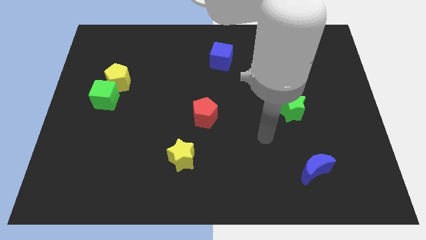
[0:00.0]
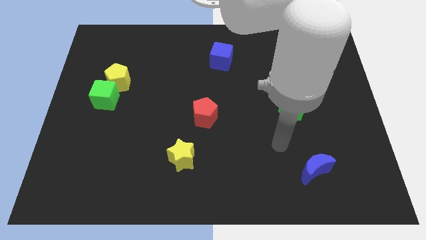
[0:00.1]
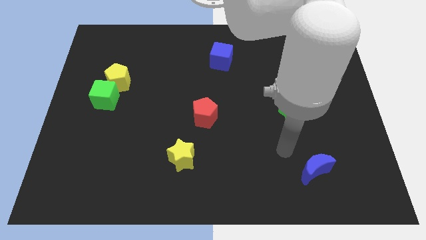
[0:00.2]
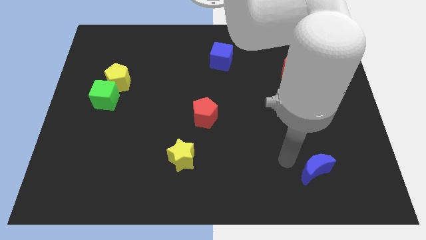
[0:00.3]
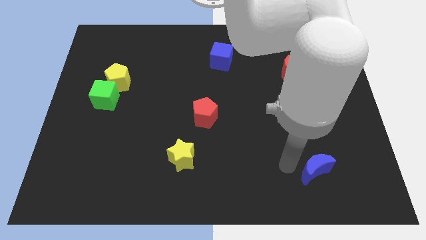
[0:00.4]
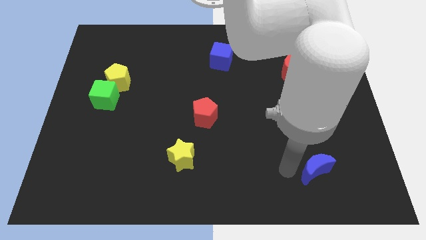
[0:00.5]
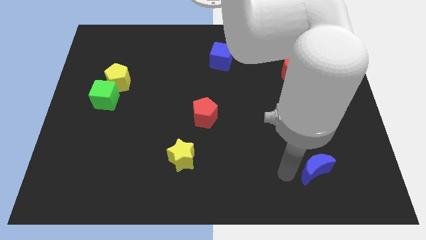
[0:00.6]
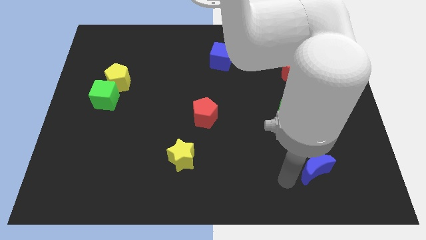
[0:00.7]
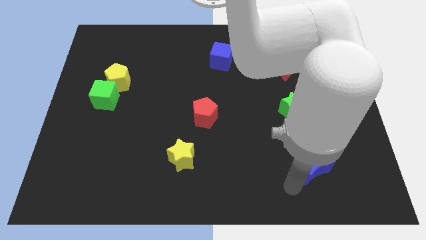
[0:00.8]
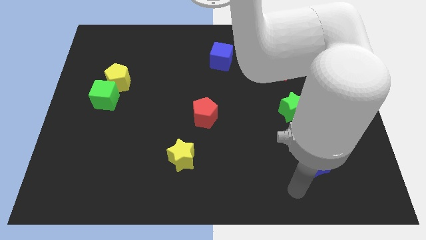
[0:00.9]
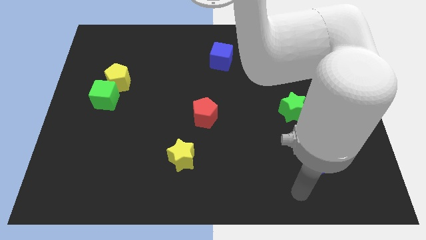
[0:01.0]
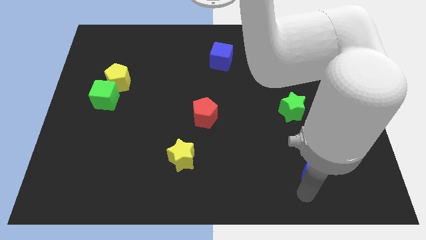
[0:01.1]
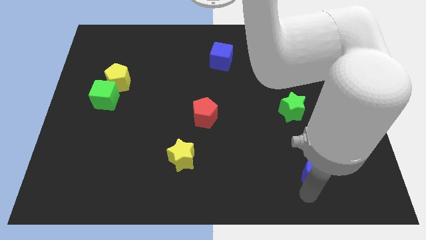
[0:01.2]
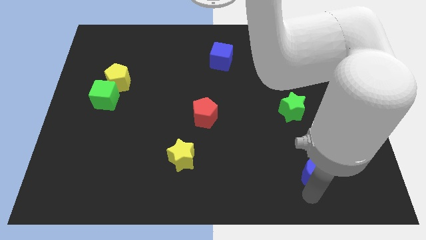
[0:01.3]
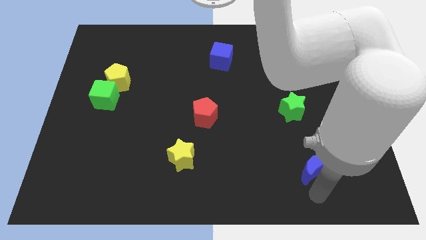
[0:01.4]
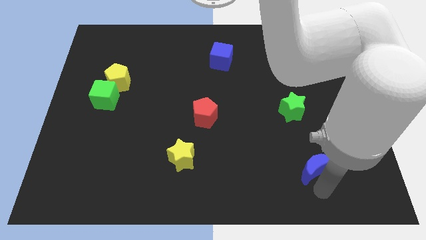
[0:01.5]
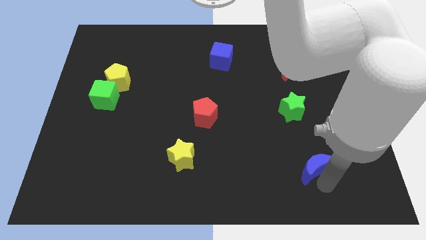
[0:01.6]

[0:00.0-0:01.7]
move the arm to the bottom of the blue crescent

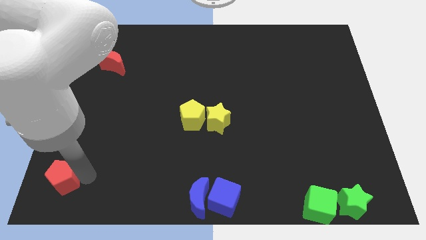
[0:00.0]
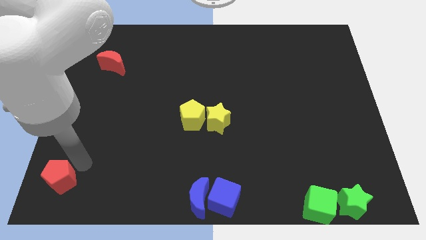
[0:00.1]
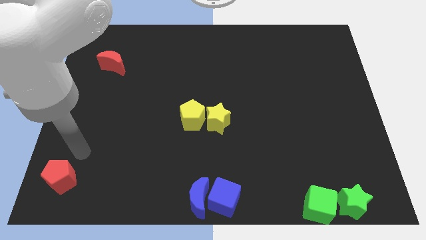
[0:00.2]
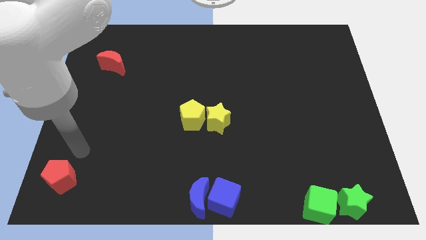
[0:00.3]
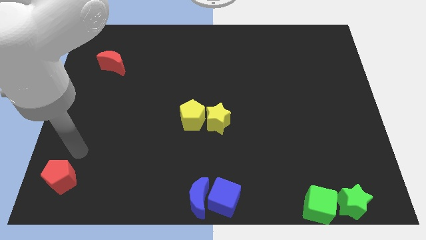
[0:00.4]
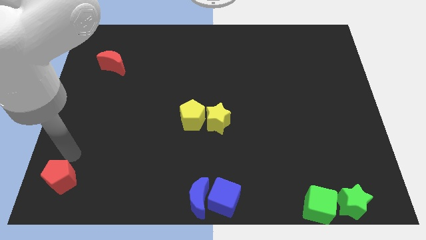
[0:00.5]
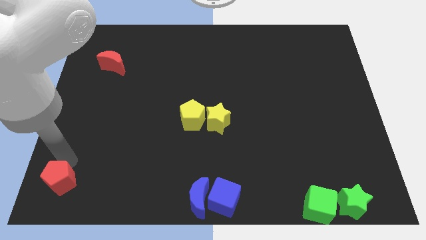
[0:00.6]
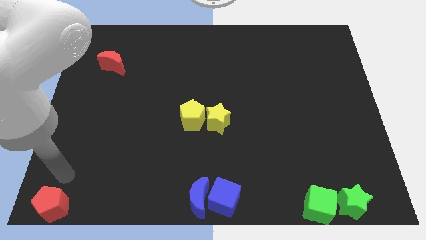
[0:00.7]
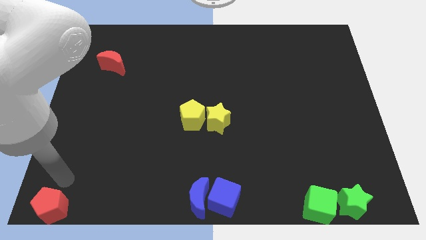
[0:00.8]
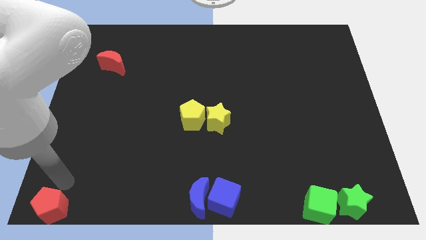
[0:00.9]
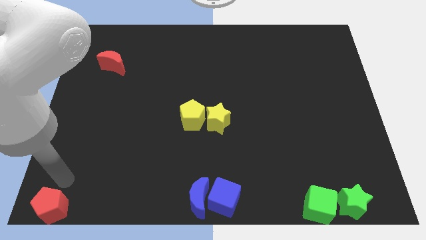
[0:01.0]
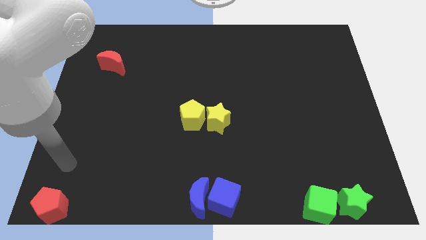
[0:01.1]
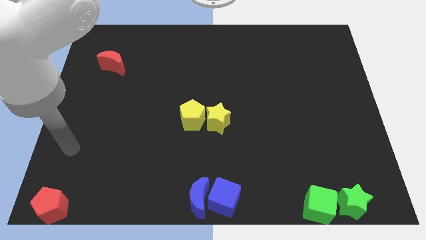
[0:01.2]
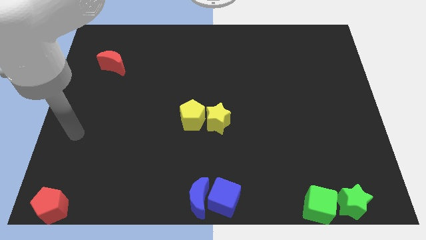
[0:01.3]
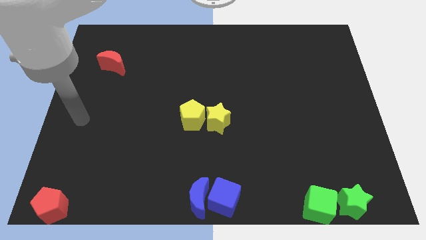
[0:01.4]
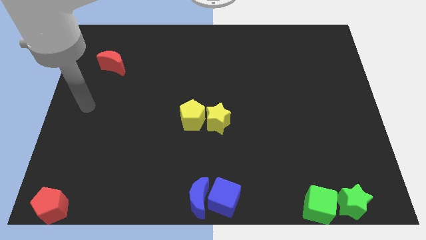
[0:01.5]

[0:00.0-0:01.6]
push the red pentagon to the bottom of the board

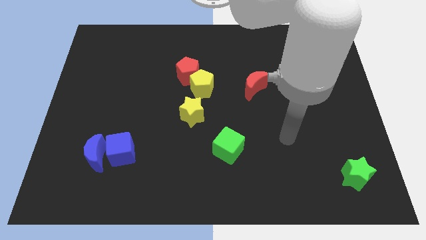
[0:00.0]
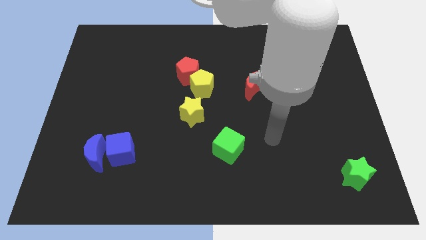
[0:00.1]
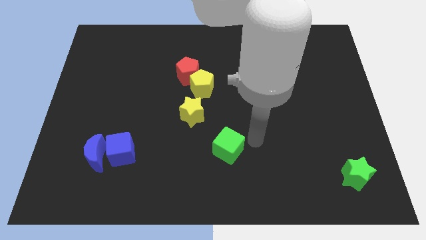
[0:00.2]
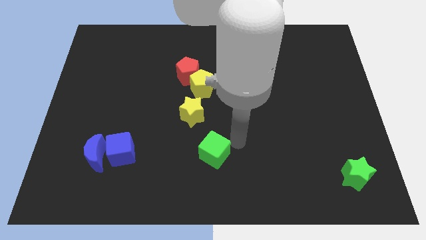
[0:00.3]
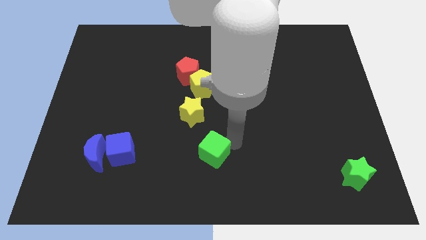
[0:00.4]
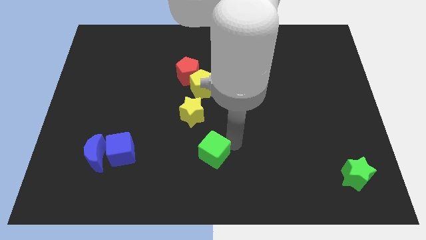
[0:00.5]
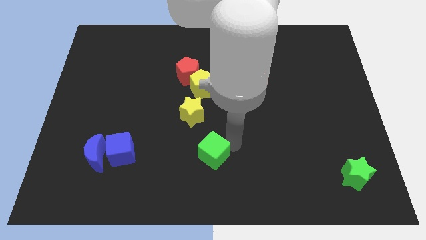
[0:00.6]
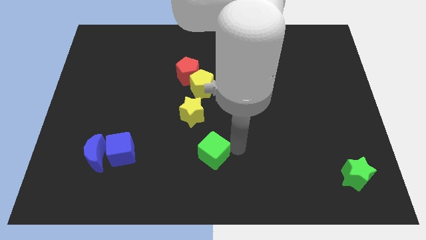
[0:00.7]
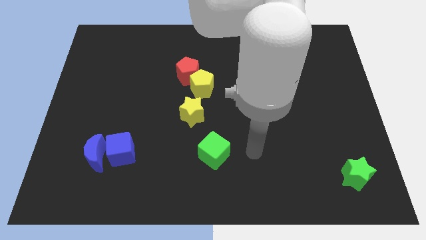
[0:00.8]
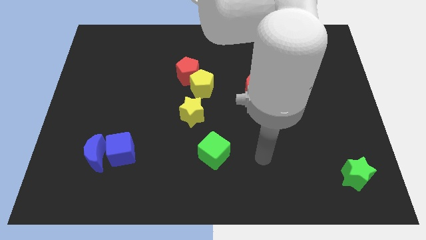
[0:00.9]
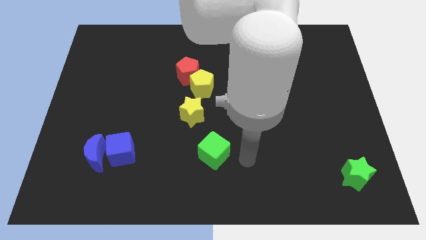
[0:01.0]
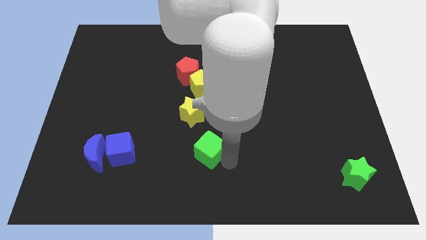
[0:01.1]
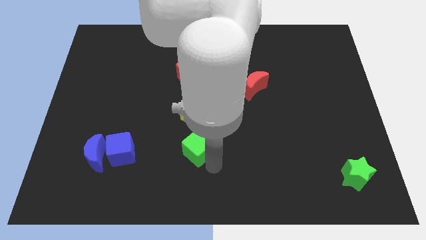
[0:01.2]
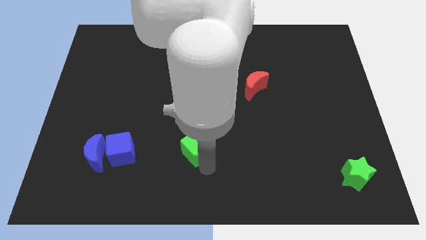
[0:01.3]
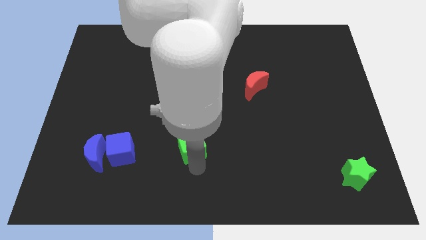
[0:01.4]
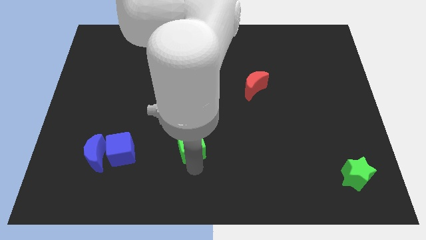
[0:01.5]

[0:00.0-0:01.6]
place green cube to the bottom of the yellow star

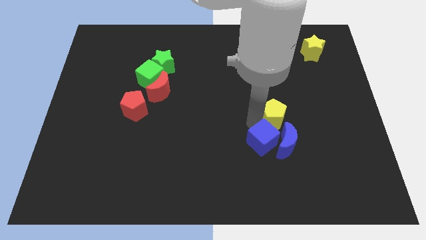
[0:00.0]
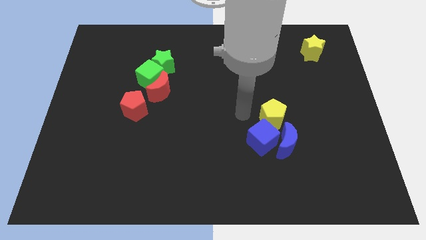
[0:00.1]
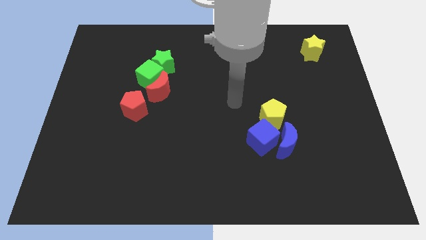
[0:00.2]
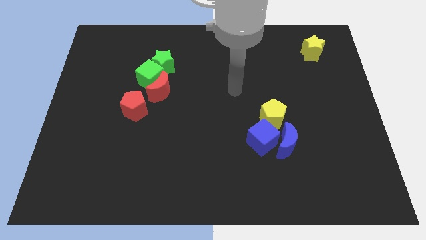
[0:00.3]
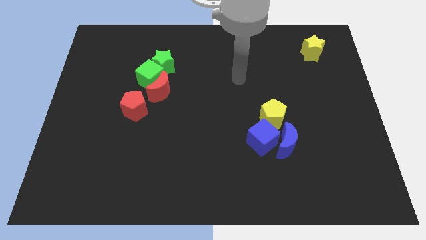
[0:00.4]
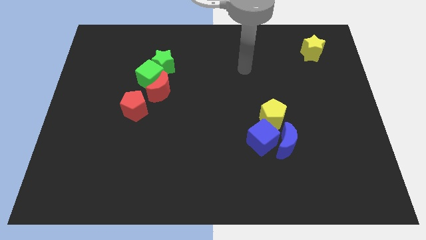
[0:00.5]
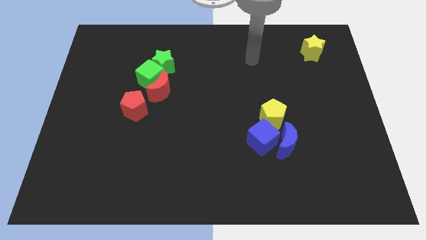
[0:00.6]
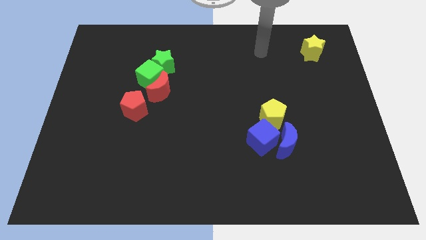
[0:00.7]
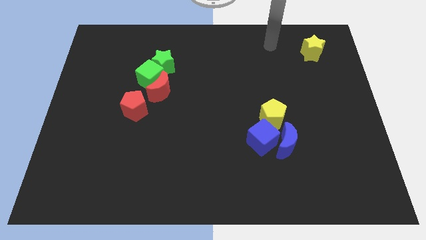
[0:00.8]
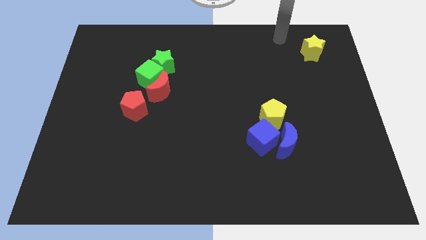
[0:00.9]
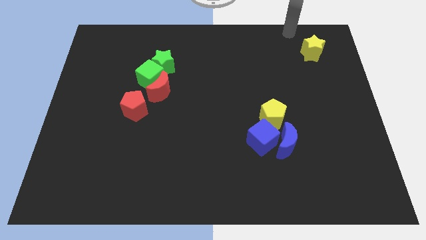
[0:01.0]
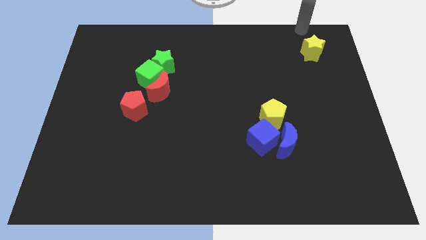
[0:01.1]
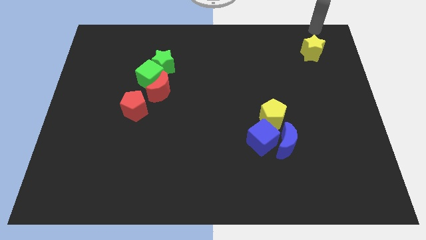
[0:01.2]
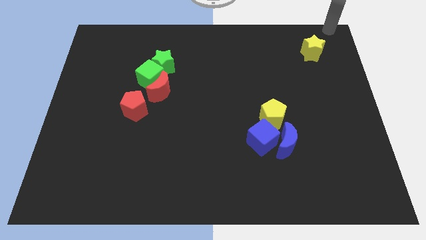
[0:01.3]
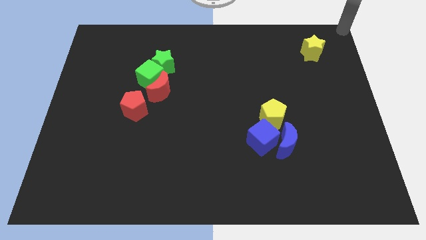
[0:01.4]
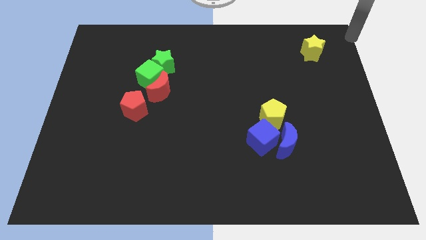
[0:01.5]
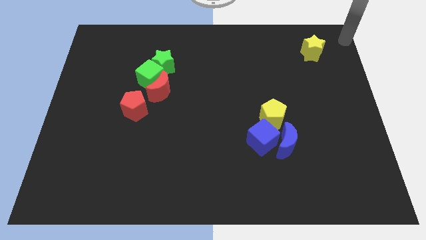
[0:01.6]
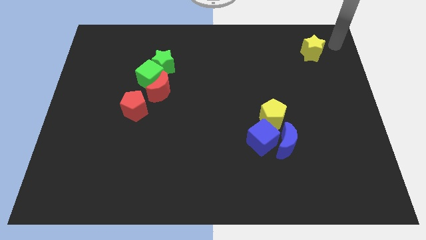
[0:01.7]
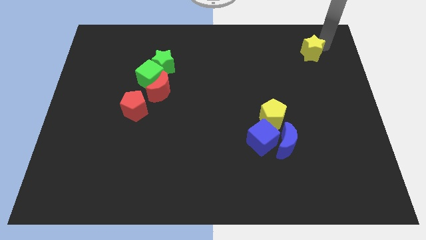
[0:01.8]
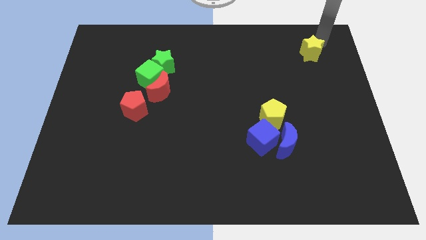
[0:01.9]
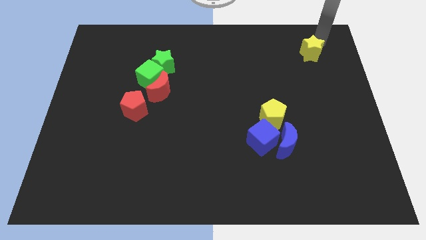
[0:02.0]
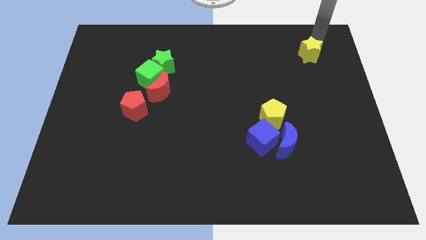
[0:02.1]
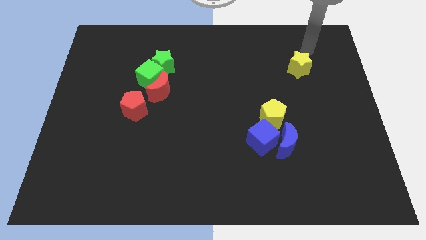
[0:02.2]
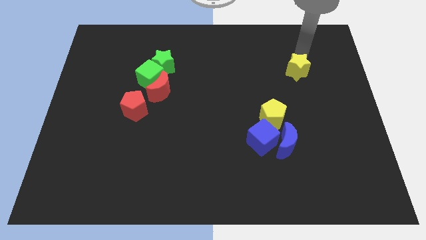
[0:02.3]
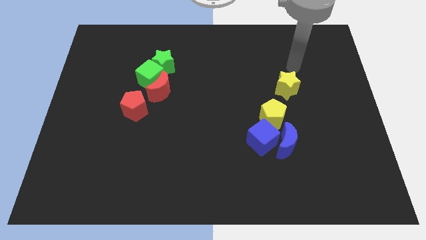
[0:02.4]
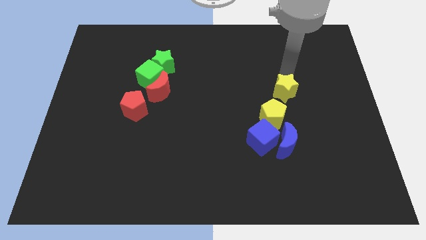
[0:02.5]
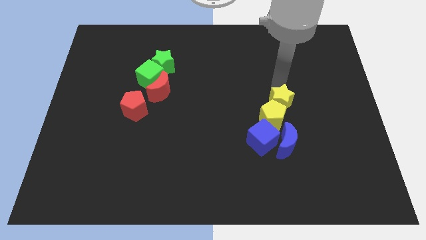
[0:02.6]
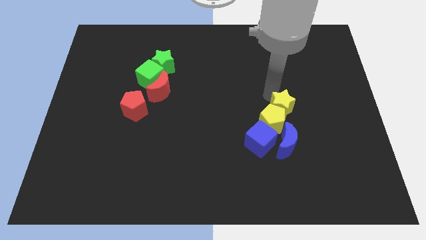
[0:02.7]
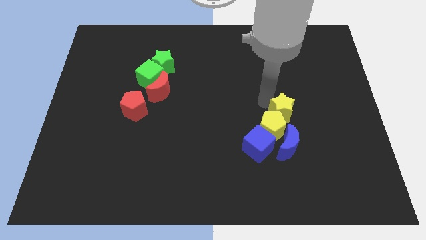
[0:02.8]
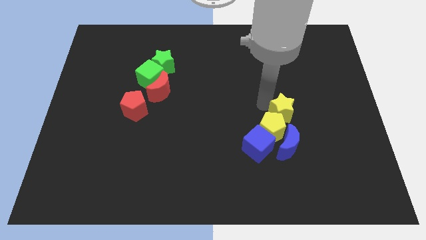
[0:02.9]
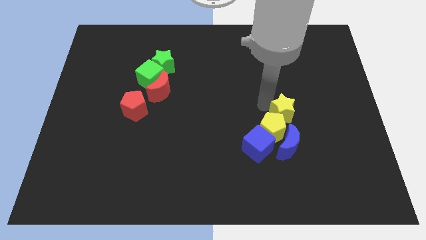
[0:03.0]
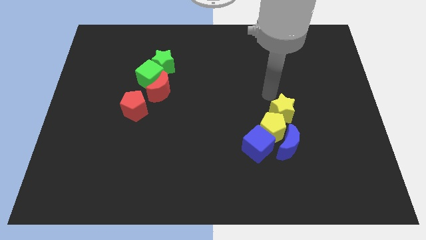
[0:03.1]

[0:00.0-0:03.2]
slide yellow star on top of yellow pentagon

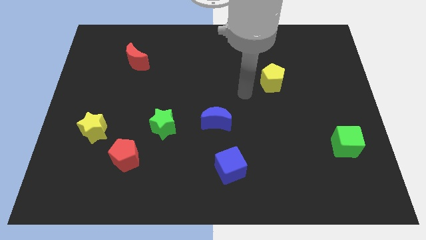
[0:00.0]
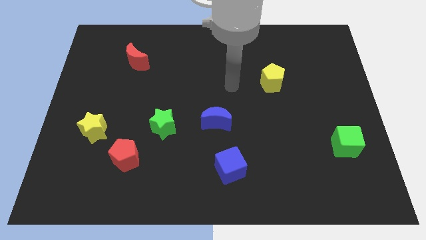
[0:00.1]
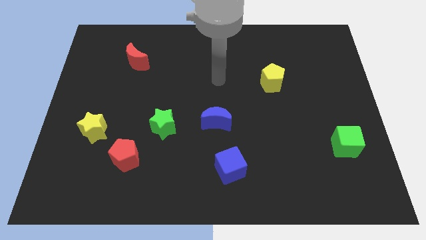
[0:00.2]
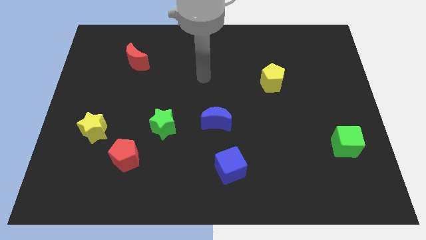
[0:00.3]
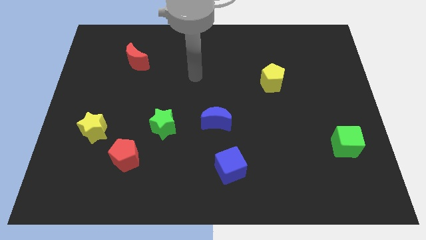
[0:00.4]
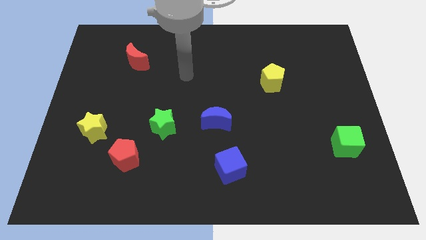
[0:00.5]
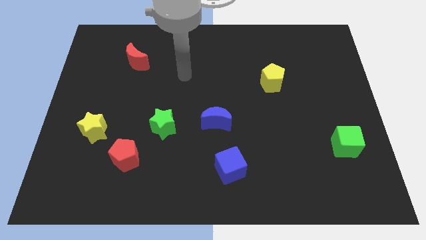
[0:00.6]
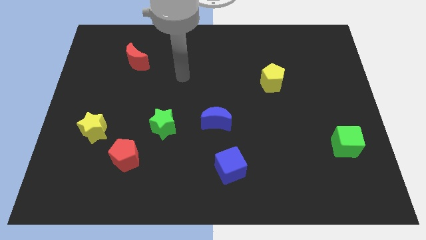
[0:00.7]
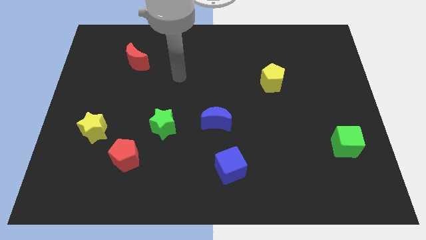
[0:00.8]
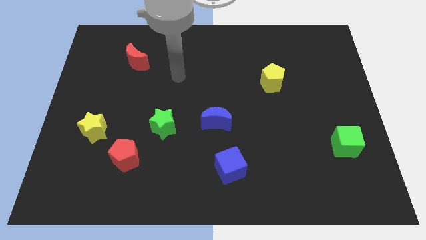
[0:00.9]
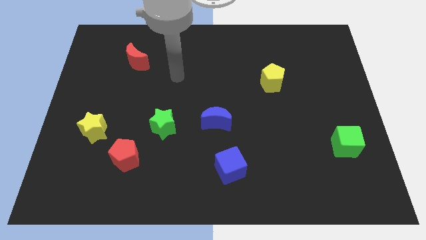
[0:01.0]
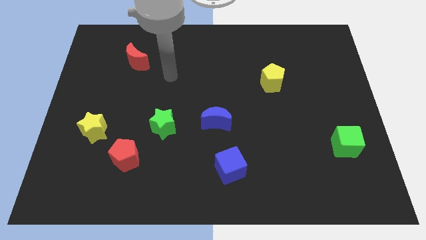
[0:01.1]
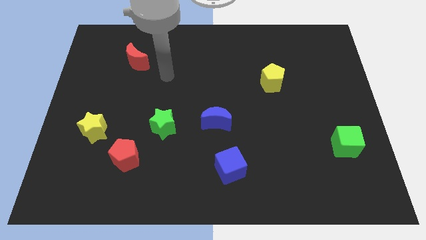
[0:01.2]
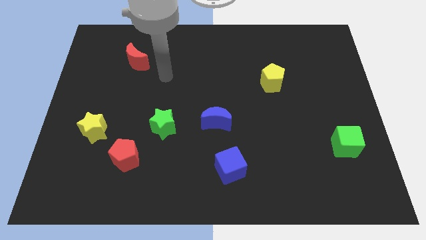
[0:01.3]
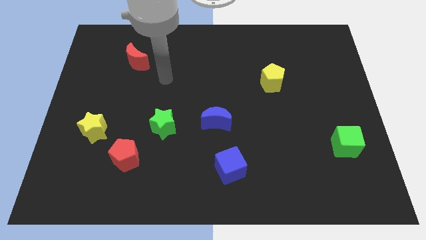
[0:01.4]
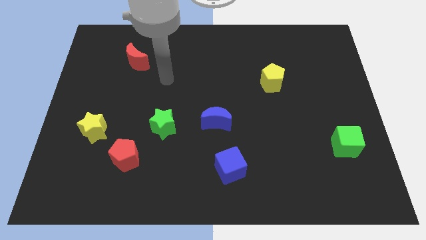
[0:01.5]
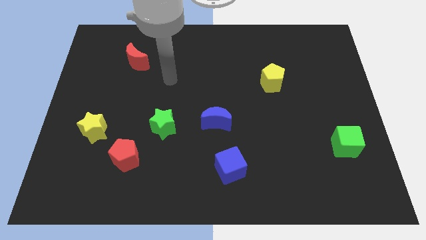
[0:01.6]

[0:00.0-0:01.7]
put your arm in between the red crescent and the blue crescent
